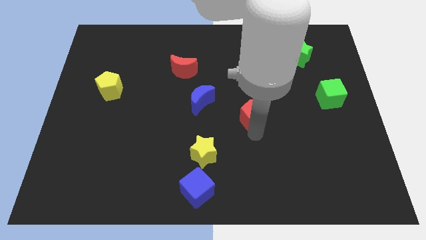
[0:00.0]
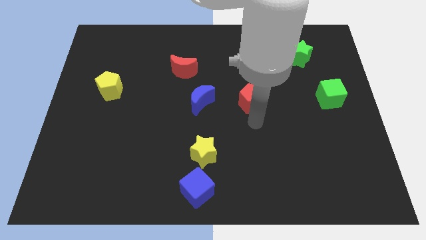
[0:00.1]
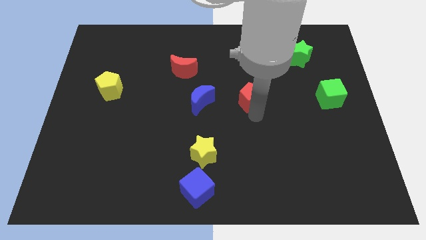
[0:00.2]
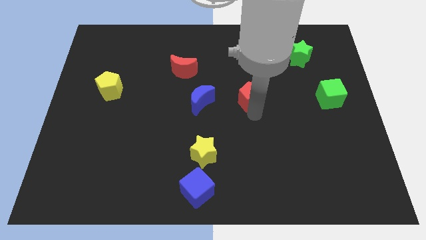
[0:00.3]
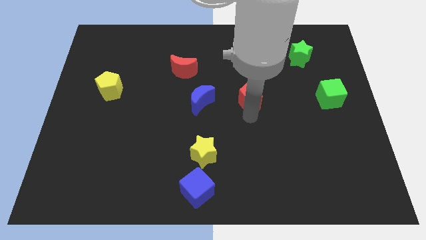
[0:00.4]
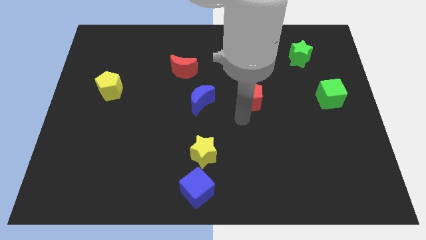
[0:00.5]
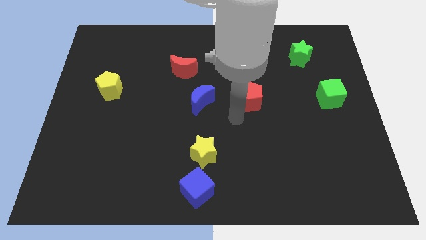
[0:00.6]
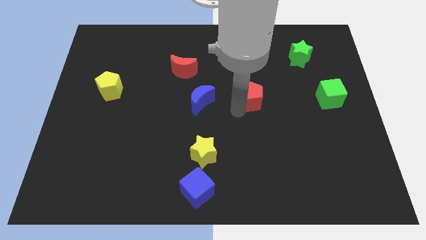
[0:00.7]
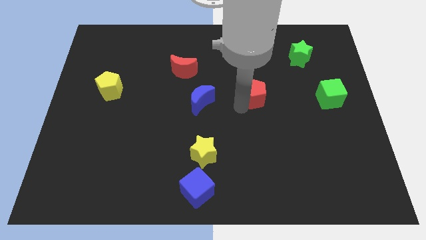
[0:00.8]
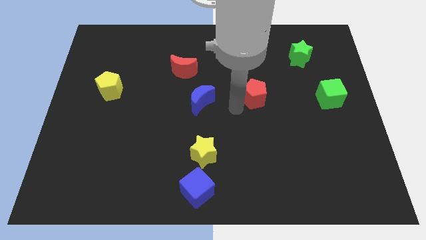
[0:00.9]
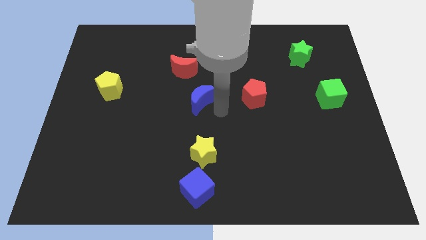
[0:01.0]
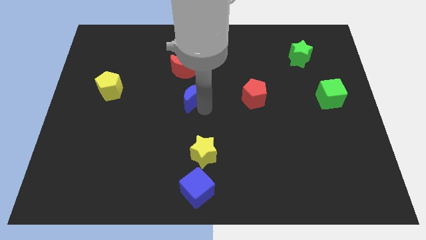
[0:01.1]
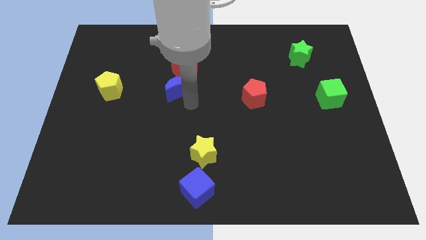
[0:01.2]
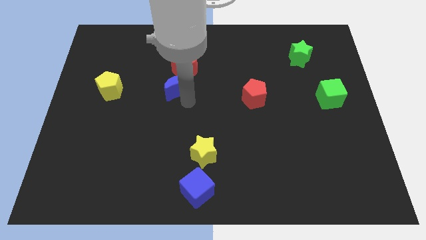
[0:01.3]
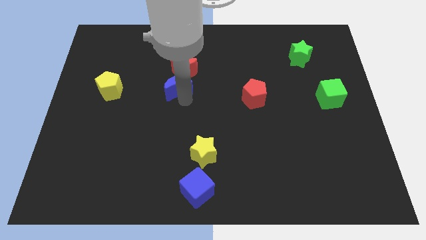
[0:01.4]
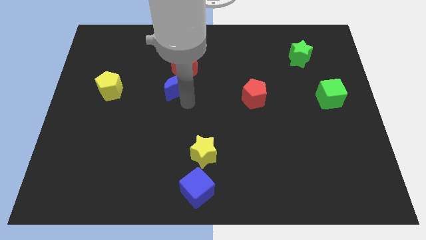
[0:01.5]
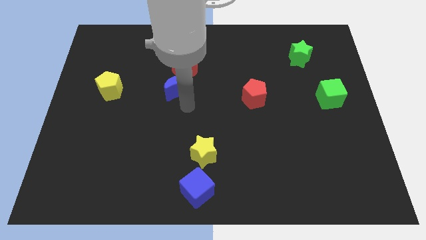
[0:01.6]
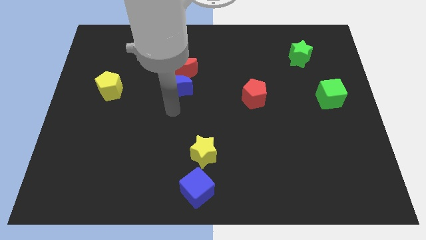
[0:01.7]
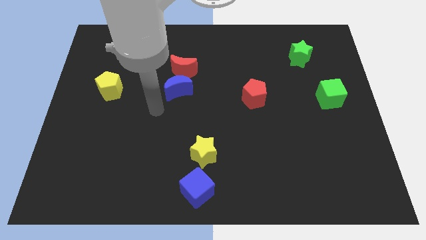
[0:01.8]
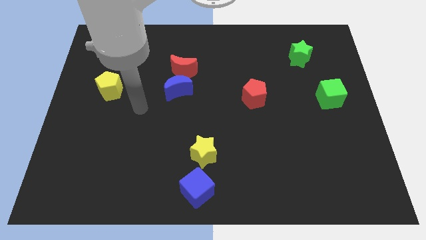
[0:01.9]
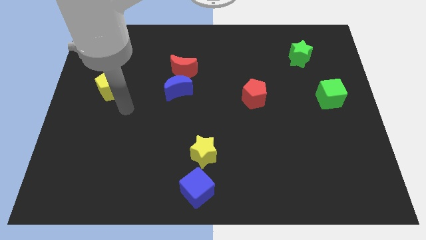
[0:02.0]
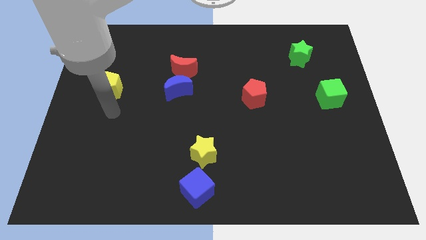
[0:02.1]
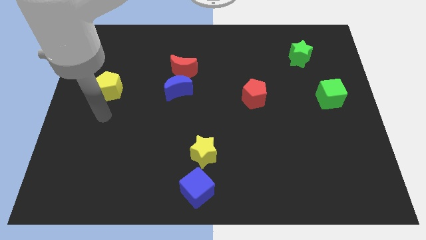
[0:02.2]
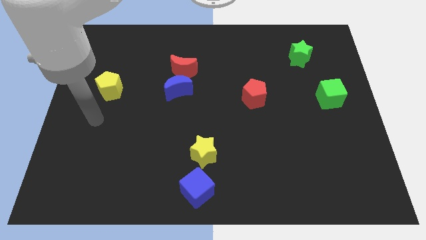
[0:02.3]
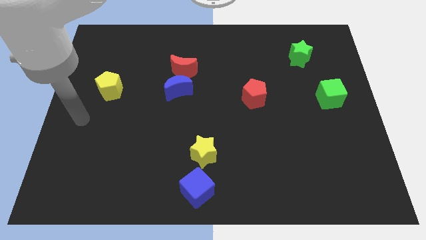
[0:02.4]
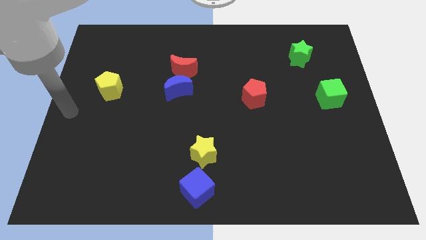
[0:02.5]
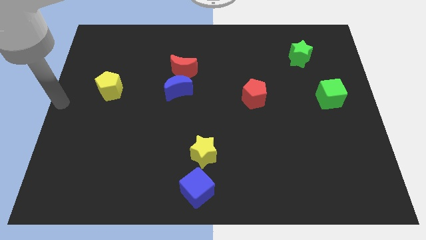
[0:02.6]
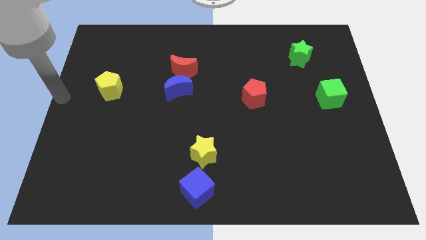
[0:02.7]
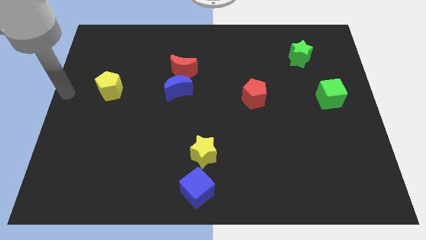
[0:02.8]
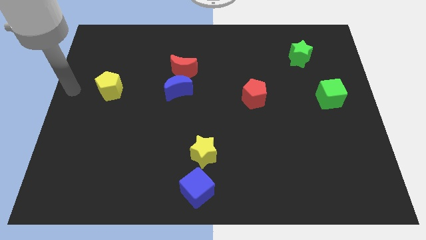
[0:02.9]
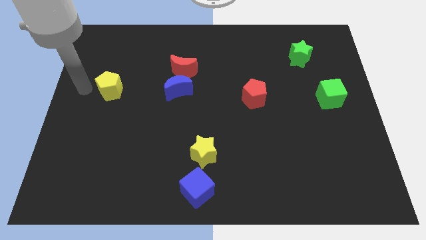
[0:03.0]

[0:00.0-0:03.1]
move the blue moon vertically below the red moon

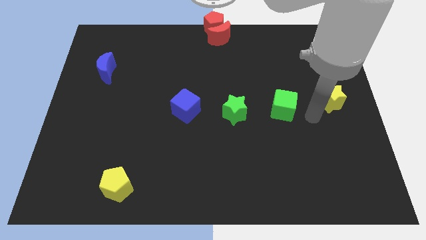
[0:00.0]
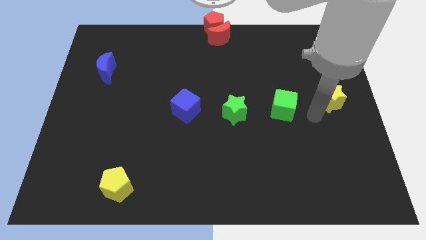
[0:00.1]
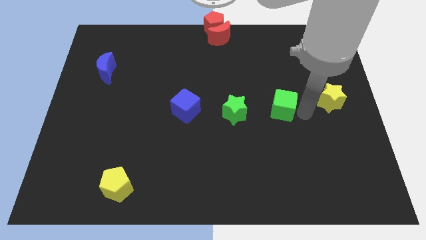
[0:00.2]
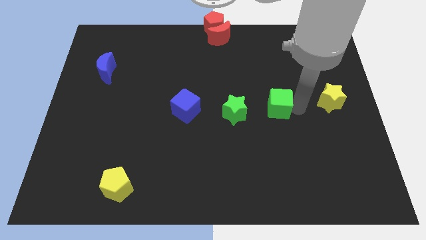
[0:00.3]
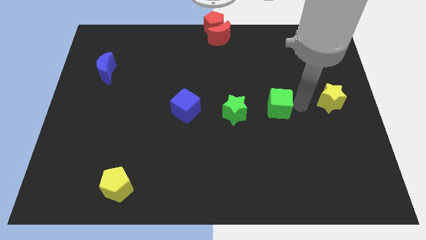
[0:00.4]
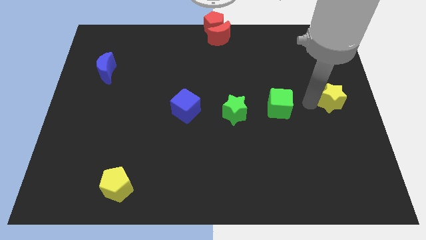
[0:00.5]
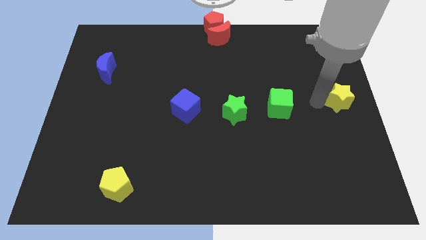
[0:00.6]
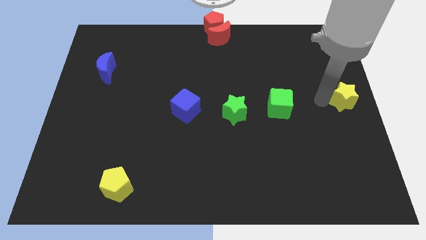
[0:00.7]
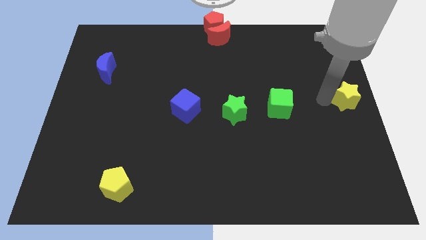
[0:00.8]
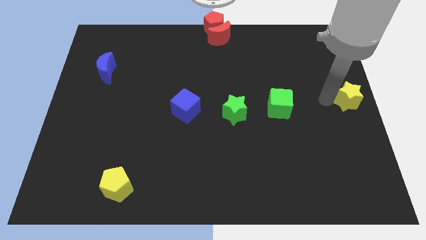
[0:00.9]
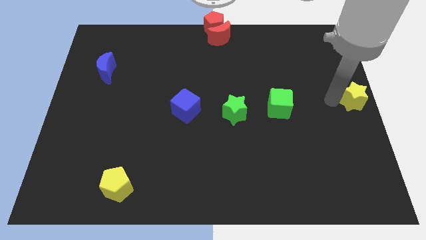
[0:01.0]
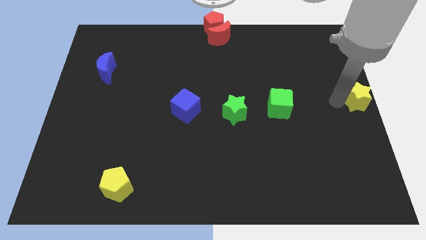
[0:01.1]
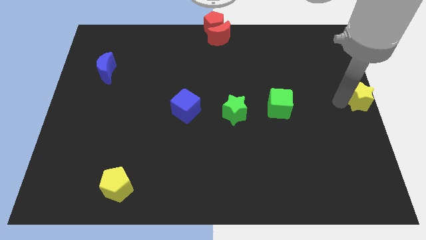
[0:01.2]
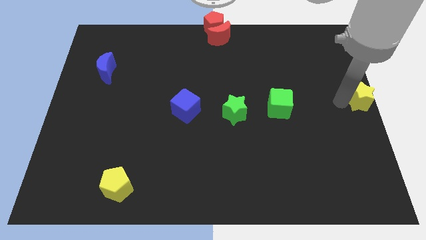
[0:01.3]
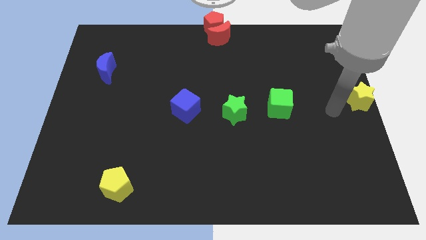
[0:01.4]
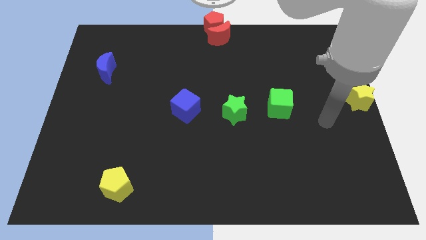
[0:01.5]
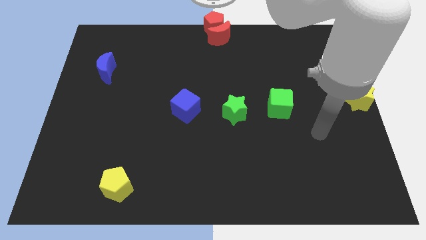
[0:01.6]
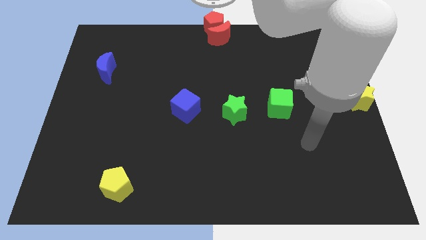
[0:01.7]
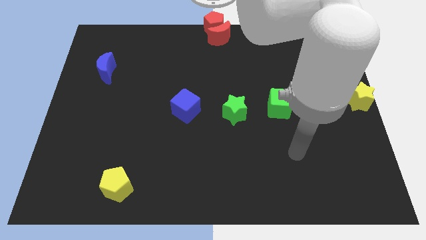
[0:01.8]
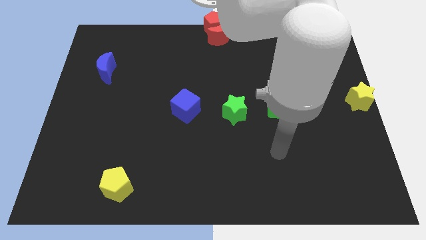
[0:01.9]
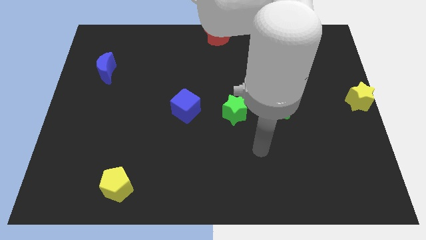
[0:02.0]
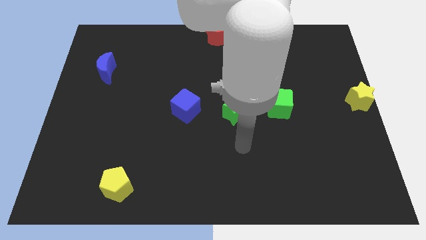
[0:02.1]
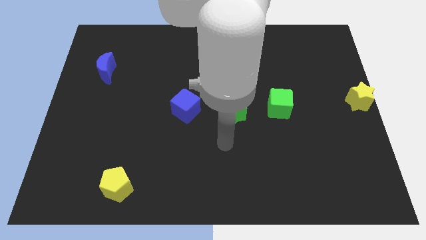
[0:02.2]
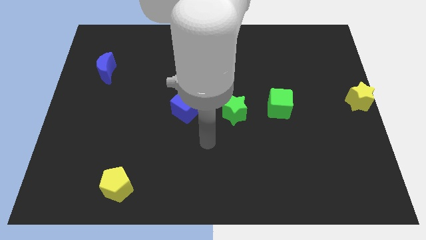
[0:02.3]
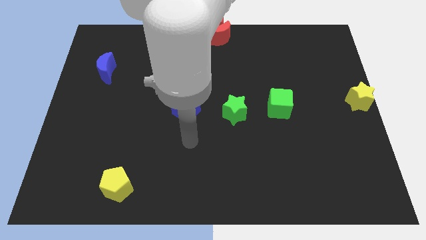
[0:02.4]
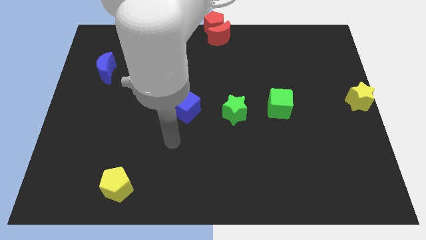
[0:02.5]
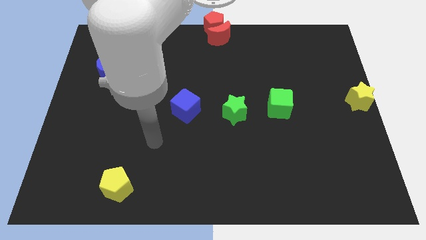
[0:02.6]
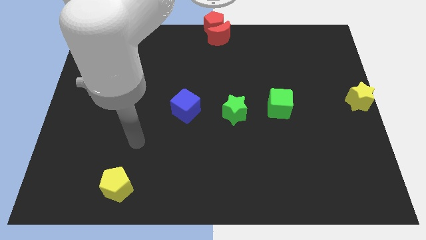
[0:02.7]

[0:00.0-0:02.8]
put the yellow star to the center right side of the board

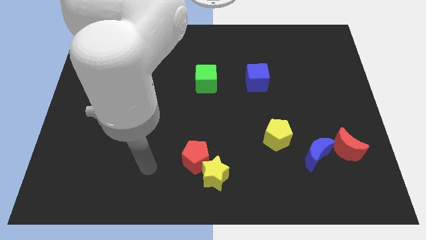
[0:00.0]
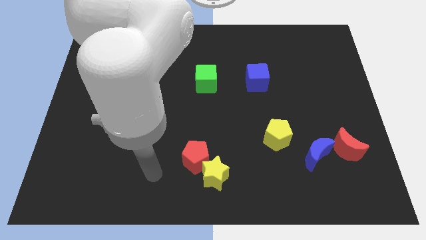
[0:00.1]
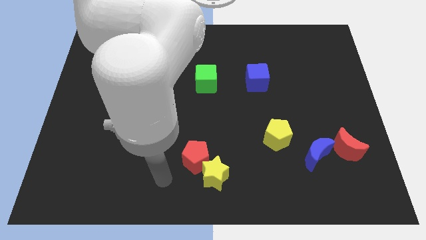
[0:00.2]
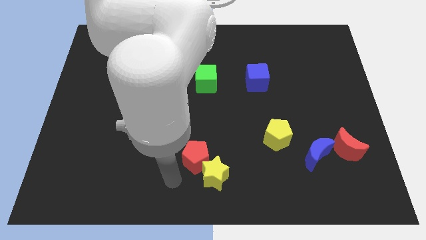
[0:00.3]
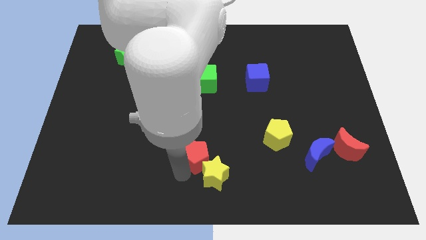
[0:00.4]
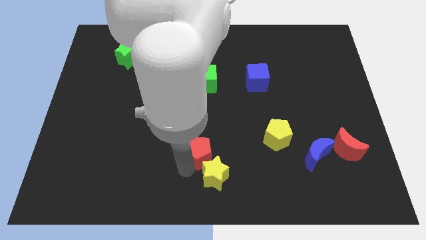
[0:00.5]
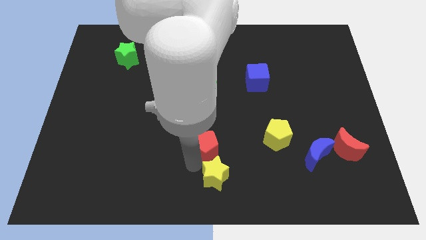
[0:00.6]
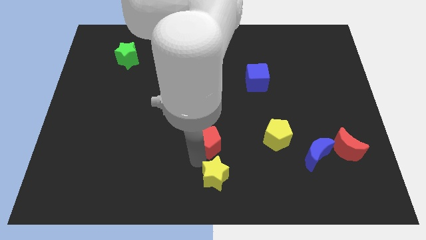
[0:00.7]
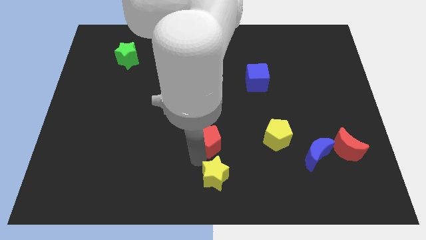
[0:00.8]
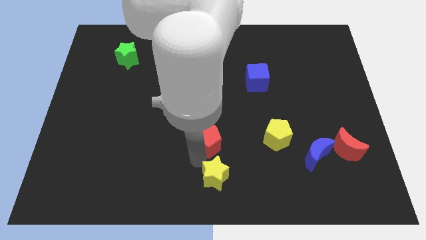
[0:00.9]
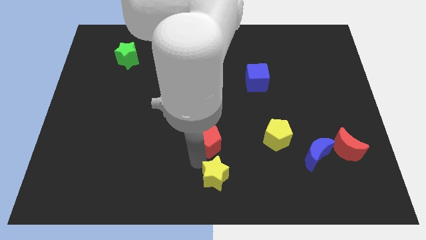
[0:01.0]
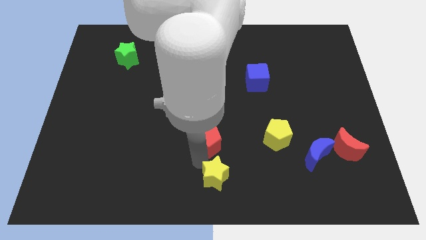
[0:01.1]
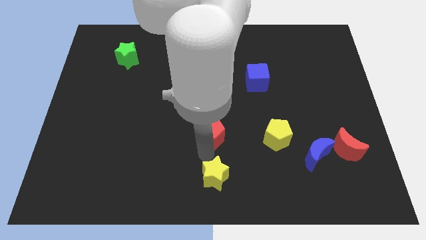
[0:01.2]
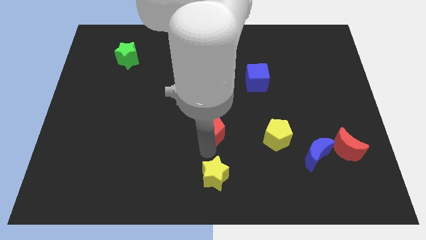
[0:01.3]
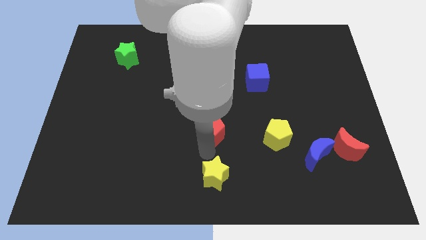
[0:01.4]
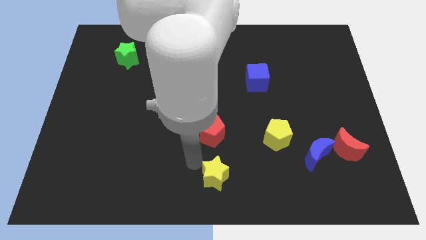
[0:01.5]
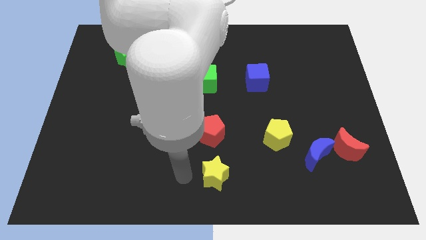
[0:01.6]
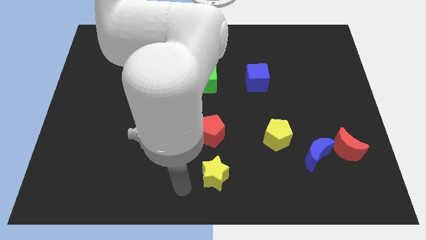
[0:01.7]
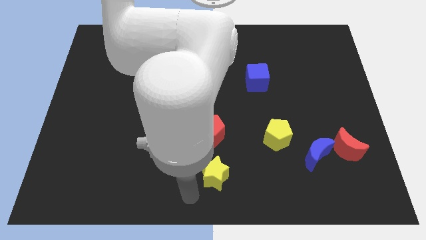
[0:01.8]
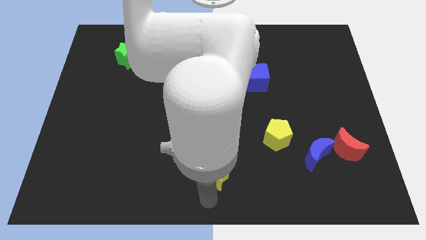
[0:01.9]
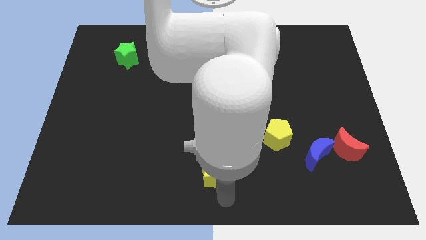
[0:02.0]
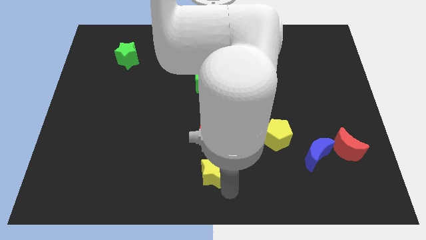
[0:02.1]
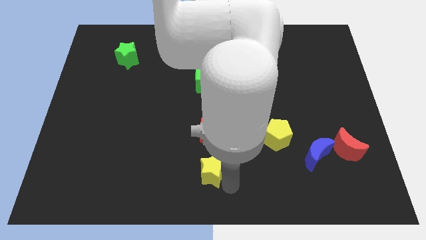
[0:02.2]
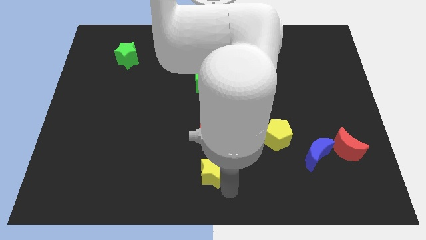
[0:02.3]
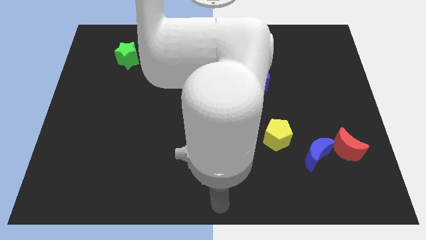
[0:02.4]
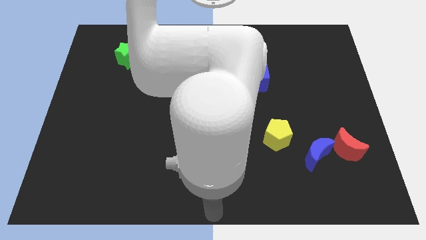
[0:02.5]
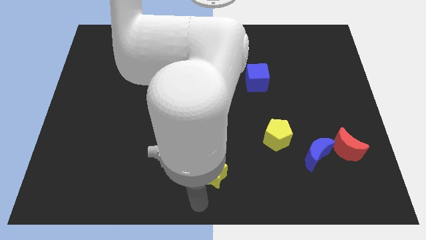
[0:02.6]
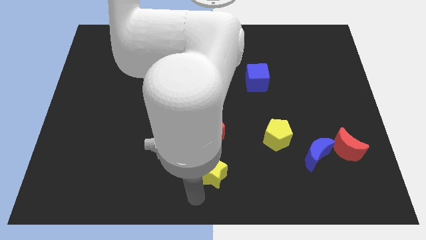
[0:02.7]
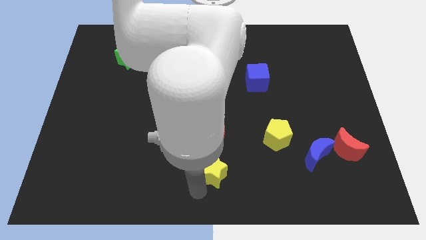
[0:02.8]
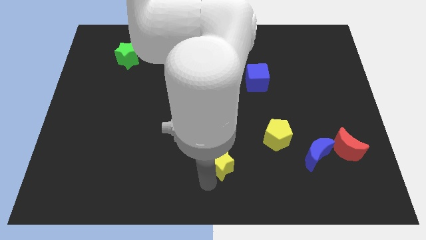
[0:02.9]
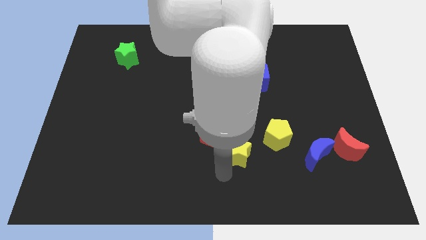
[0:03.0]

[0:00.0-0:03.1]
move the yellow star towards the yellow pentagon
